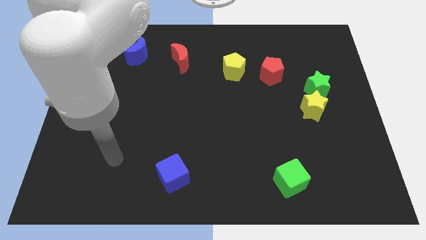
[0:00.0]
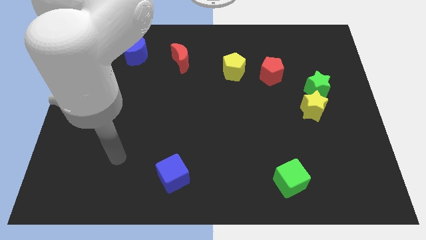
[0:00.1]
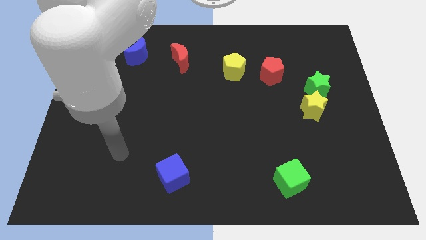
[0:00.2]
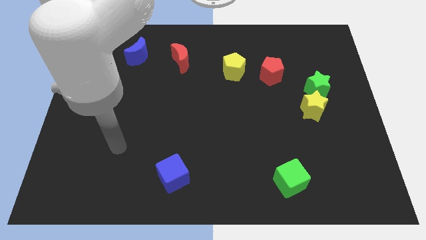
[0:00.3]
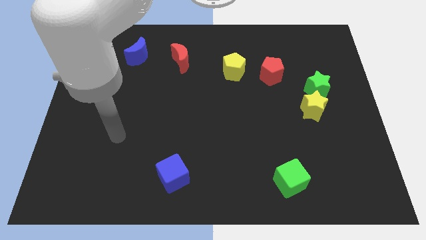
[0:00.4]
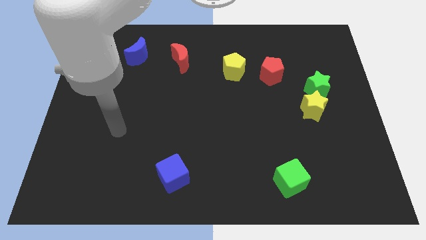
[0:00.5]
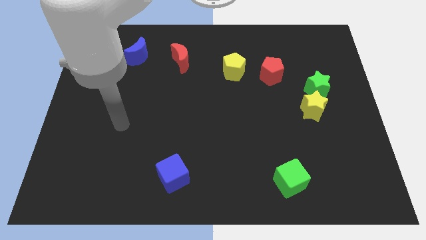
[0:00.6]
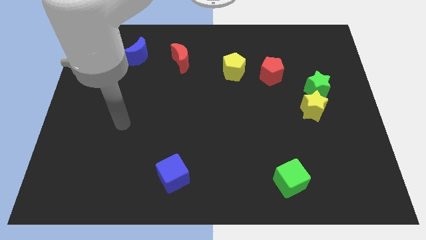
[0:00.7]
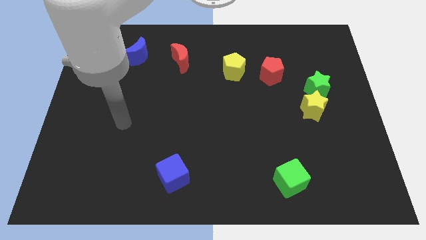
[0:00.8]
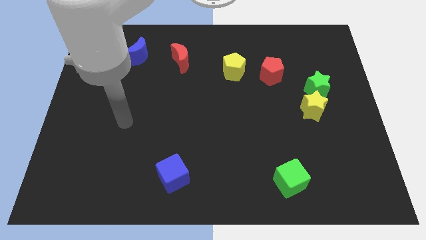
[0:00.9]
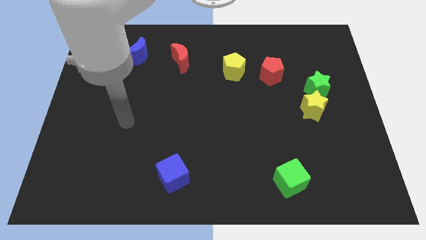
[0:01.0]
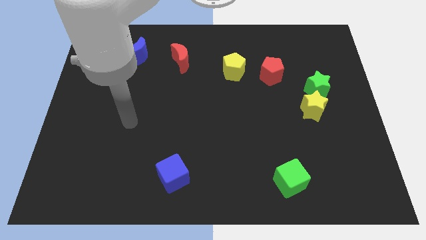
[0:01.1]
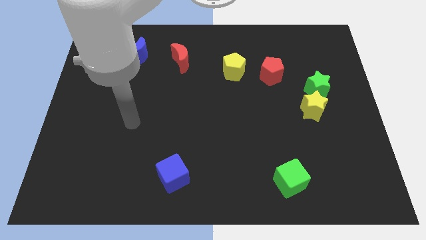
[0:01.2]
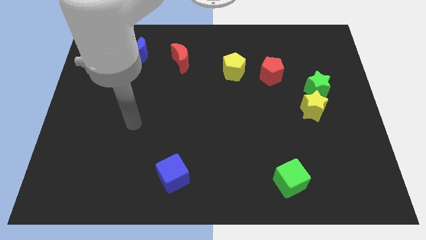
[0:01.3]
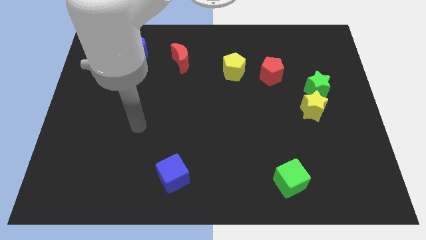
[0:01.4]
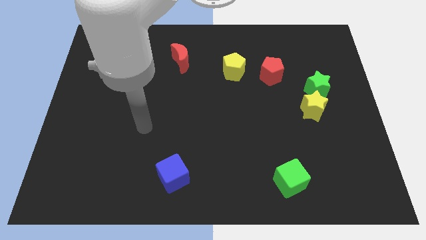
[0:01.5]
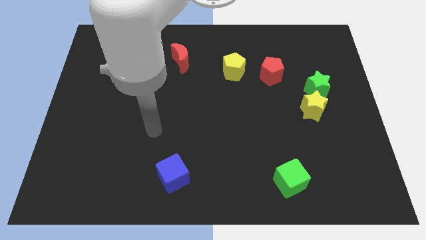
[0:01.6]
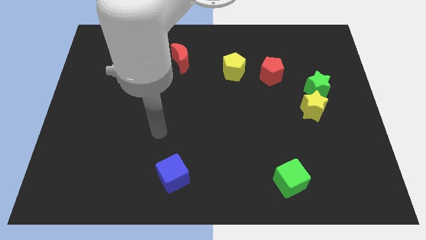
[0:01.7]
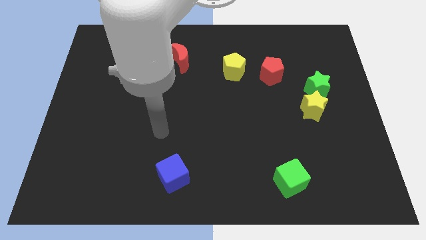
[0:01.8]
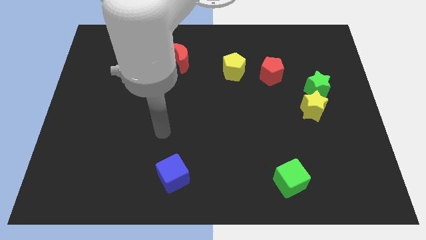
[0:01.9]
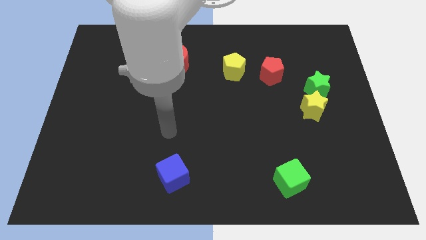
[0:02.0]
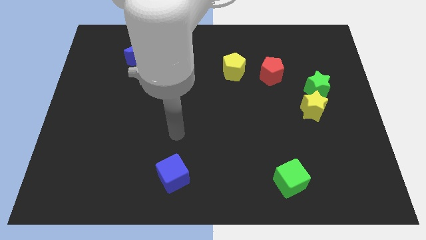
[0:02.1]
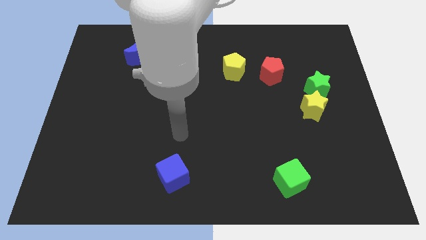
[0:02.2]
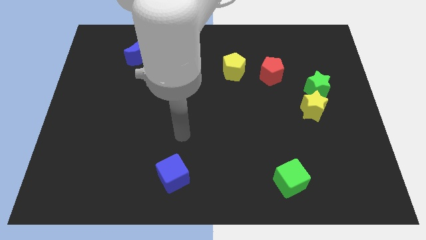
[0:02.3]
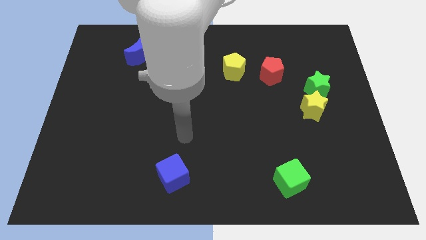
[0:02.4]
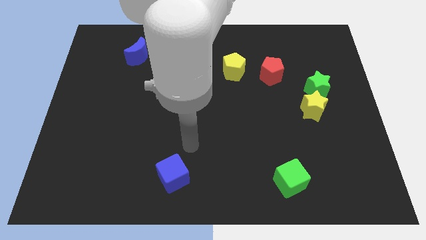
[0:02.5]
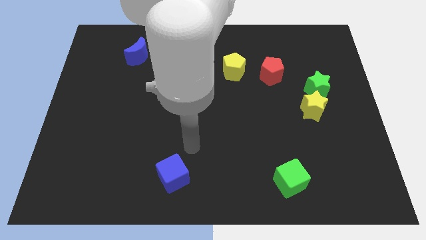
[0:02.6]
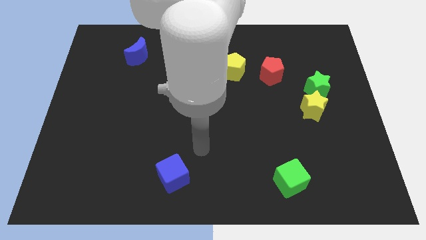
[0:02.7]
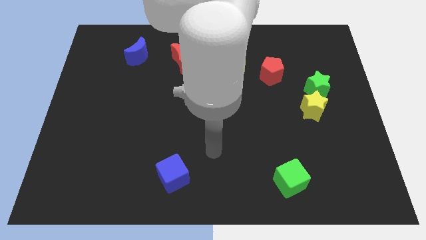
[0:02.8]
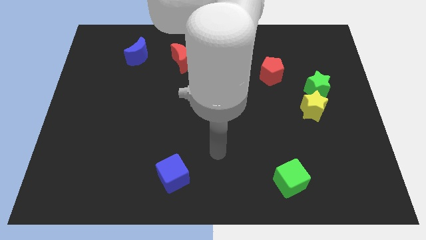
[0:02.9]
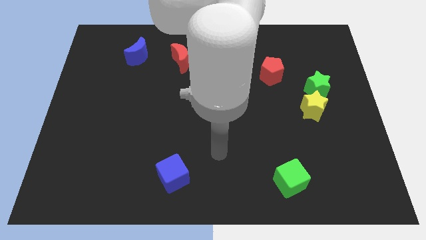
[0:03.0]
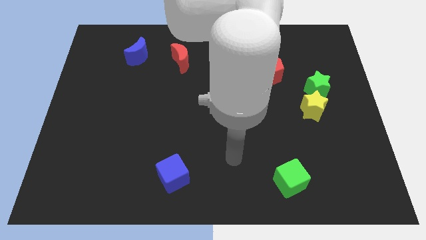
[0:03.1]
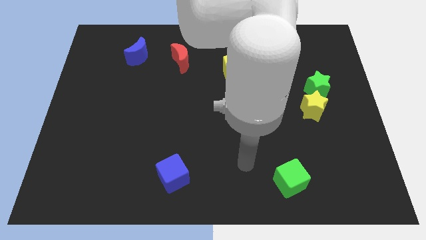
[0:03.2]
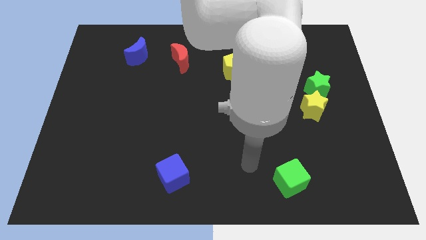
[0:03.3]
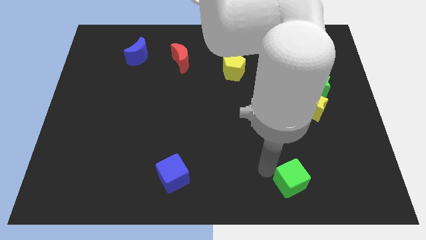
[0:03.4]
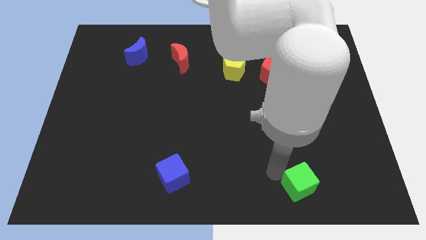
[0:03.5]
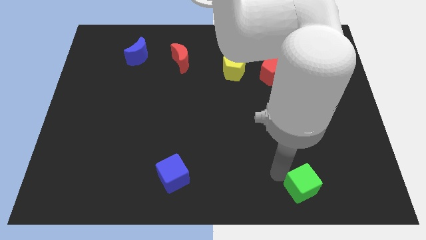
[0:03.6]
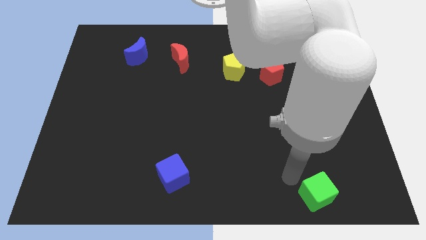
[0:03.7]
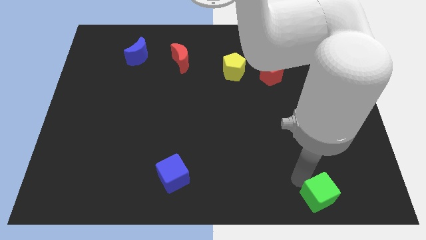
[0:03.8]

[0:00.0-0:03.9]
slide the green cube towards the bottom right side of the table

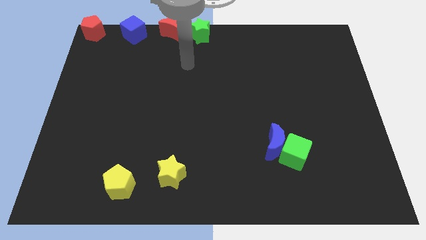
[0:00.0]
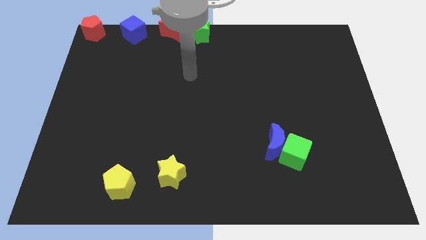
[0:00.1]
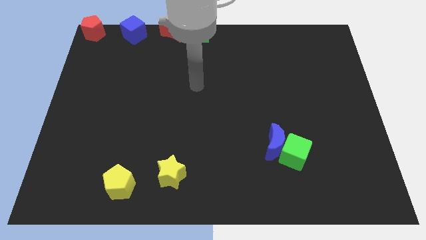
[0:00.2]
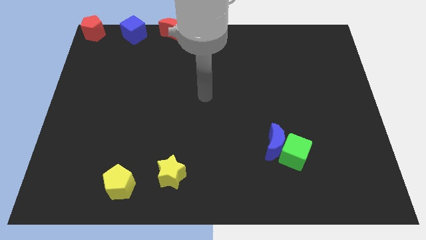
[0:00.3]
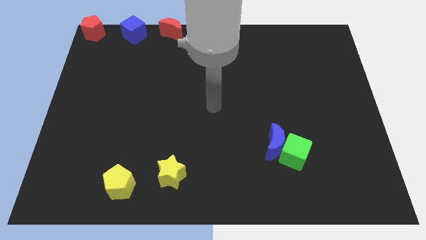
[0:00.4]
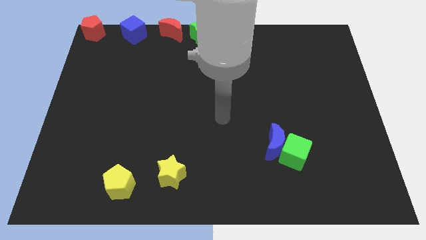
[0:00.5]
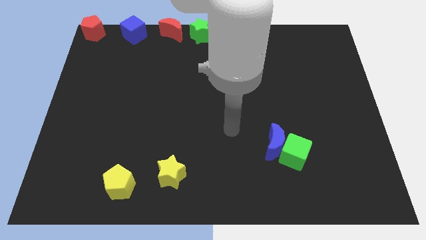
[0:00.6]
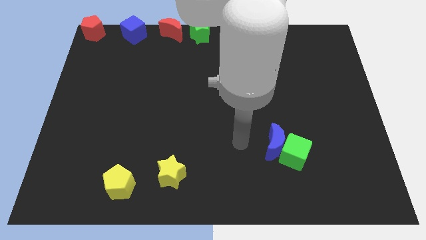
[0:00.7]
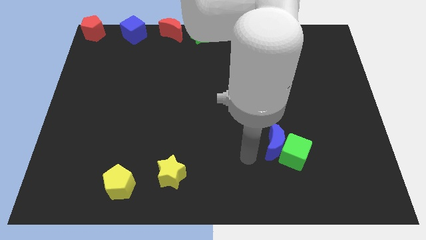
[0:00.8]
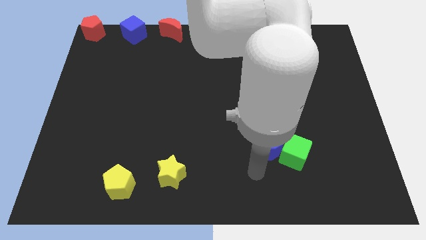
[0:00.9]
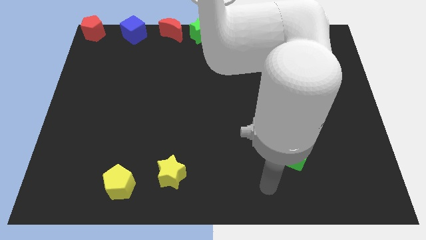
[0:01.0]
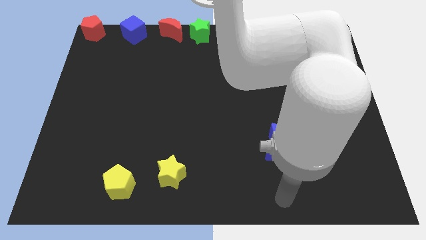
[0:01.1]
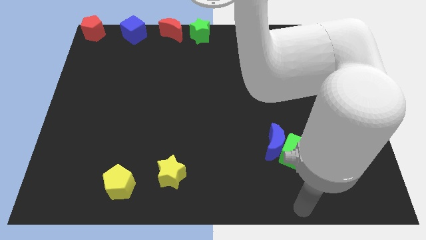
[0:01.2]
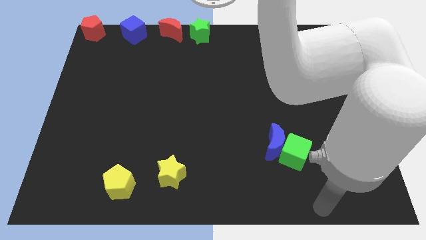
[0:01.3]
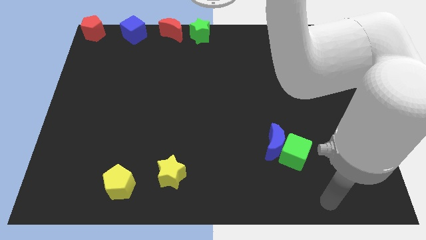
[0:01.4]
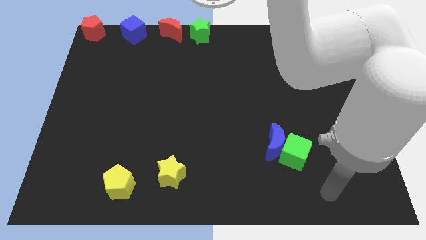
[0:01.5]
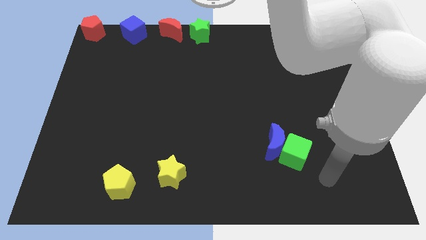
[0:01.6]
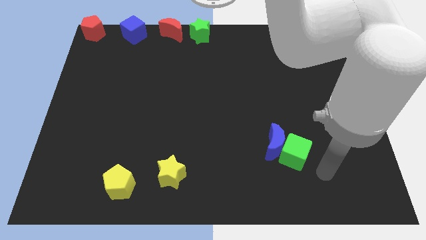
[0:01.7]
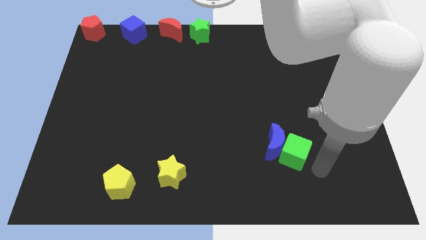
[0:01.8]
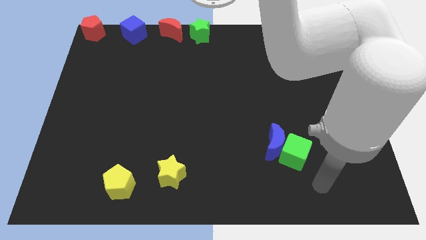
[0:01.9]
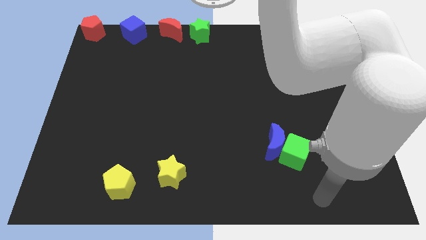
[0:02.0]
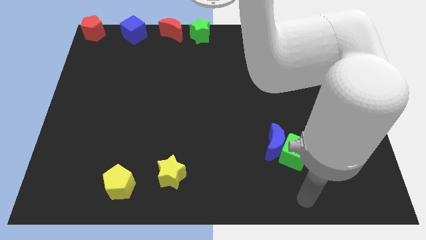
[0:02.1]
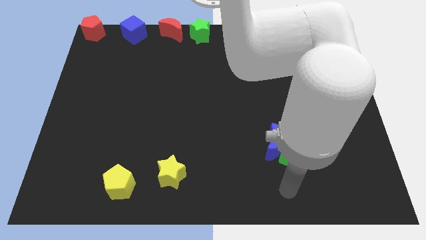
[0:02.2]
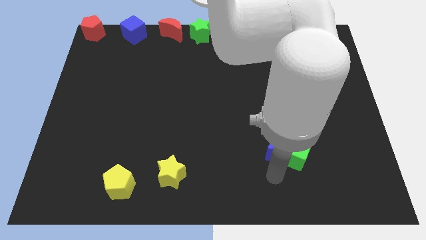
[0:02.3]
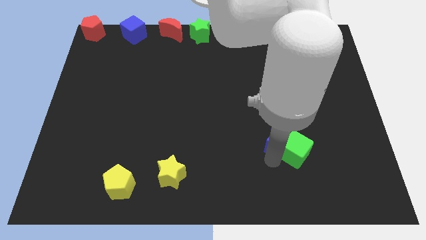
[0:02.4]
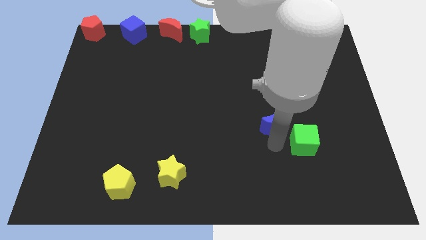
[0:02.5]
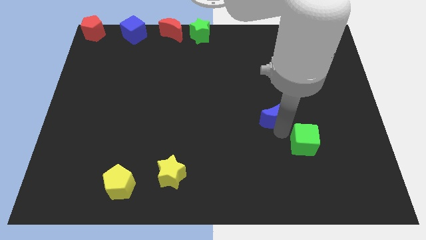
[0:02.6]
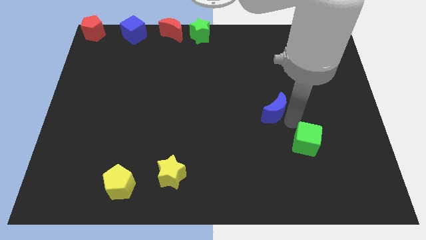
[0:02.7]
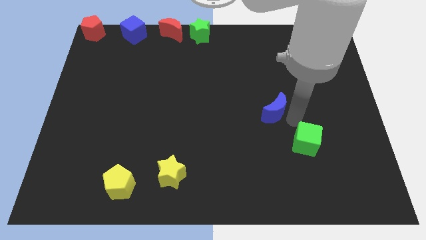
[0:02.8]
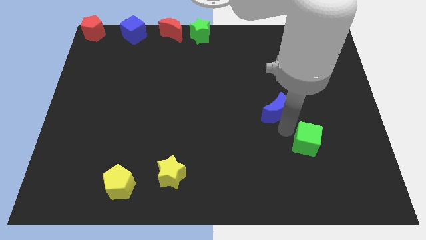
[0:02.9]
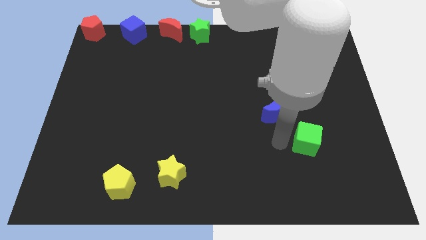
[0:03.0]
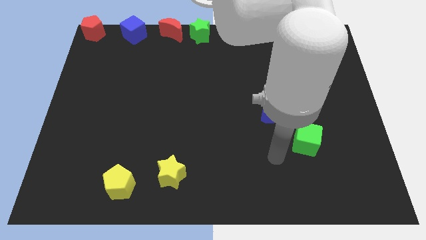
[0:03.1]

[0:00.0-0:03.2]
separate the blue crescent and green cube

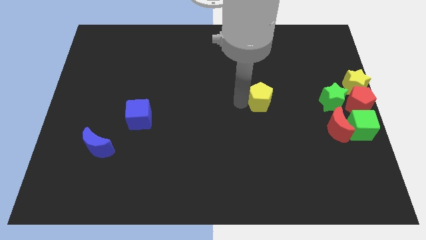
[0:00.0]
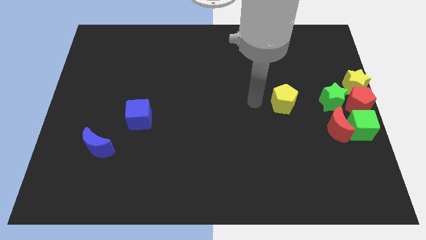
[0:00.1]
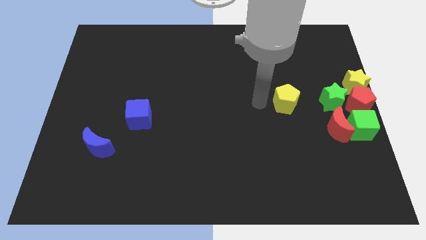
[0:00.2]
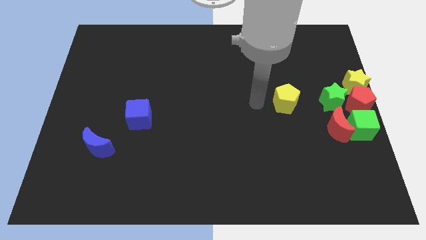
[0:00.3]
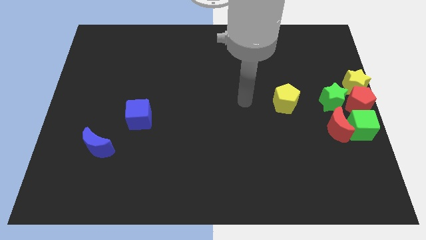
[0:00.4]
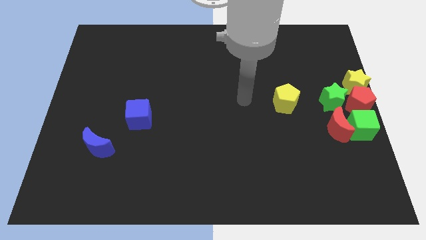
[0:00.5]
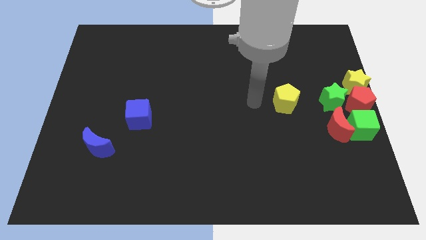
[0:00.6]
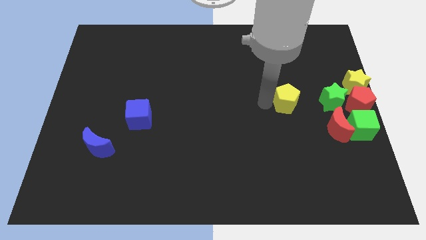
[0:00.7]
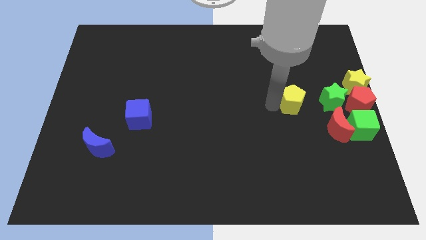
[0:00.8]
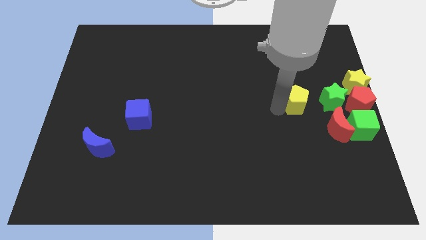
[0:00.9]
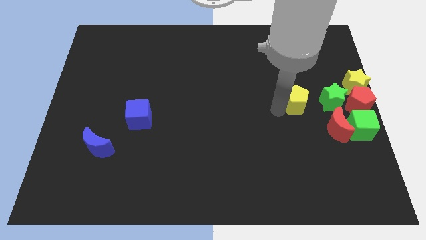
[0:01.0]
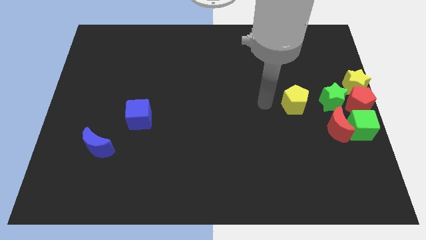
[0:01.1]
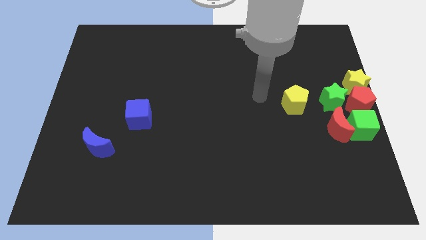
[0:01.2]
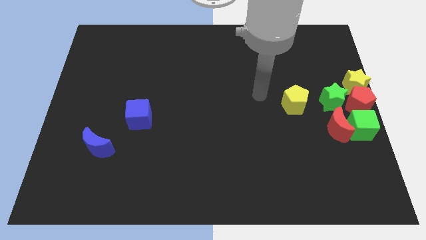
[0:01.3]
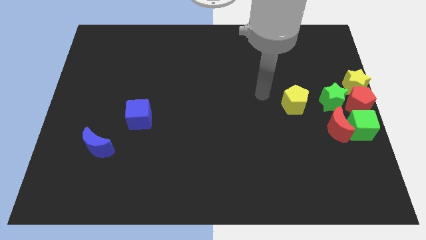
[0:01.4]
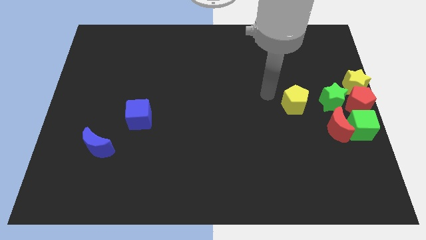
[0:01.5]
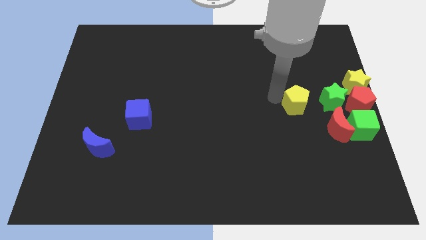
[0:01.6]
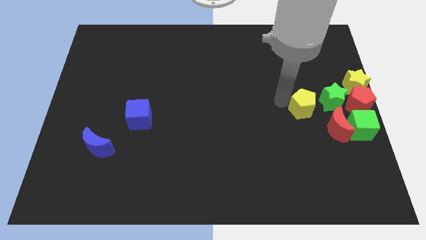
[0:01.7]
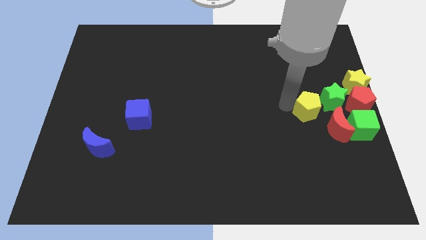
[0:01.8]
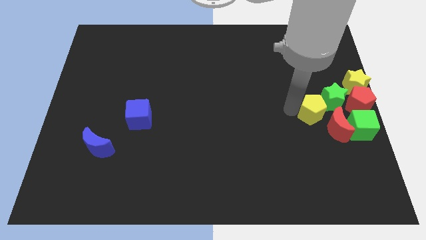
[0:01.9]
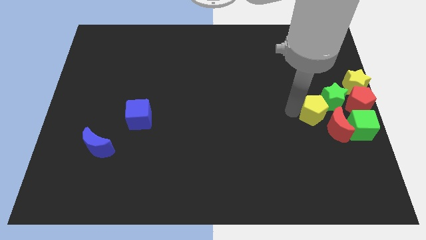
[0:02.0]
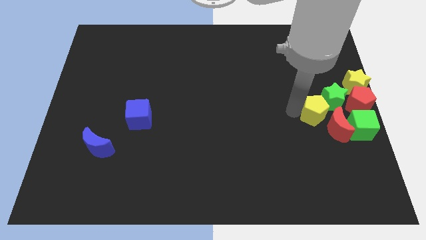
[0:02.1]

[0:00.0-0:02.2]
place the yellow pentagon behind the red crescent and green star
